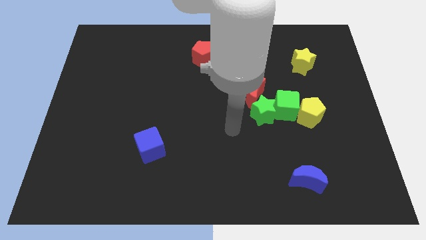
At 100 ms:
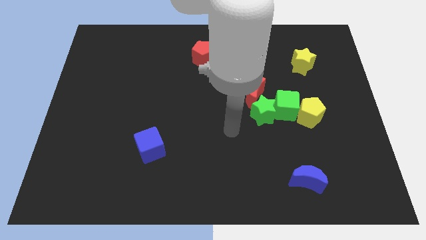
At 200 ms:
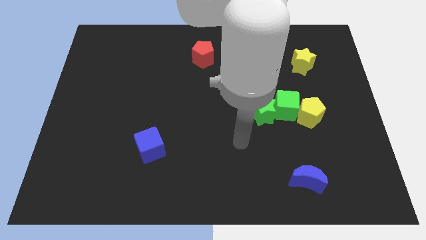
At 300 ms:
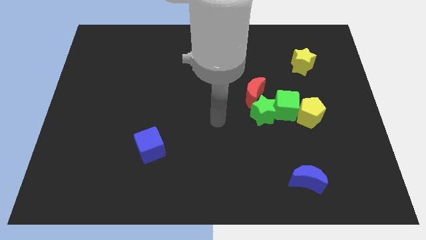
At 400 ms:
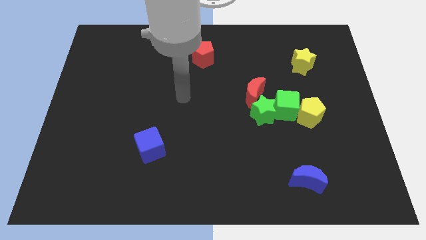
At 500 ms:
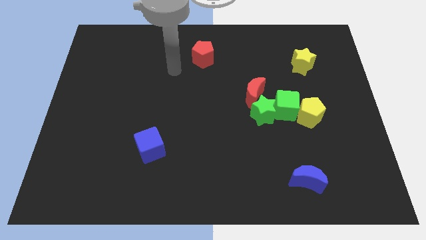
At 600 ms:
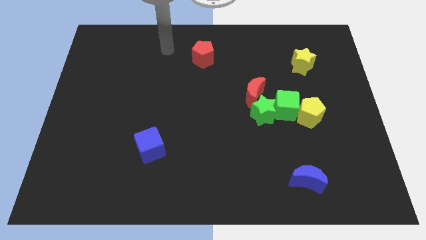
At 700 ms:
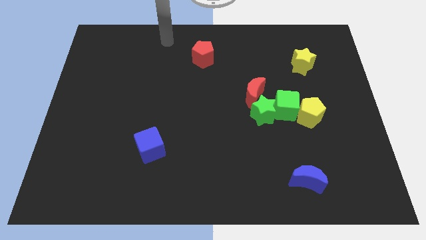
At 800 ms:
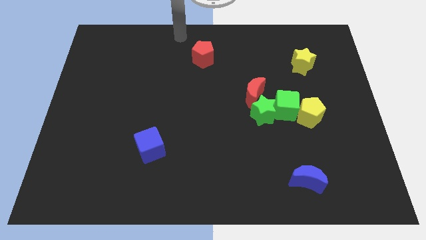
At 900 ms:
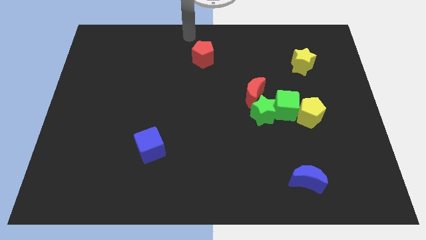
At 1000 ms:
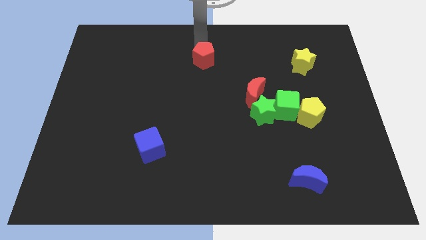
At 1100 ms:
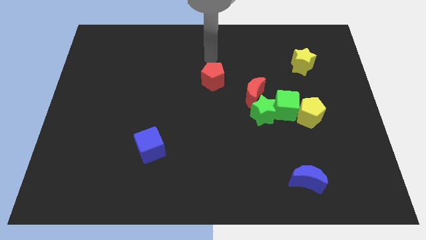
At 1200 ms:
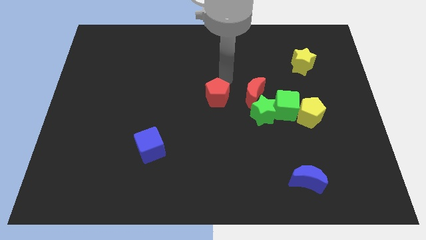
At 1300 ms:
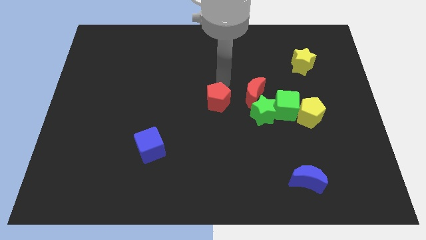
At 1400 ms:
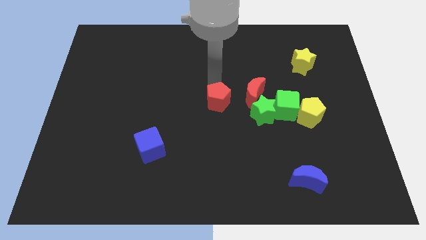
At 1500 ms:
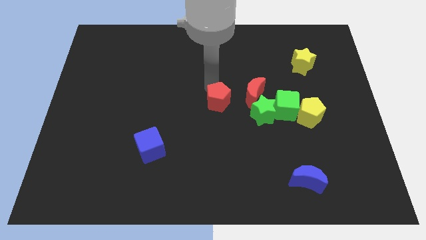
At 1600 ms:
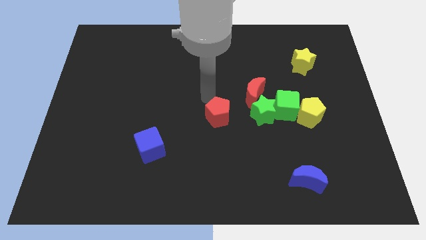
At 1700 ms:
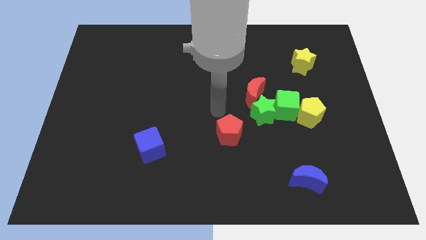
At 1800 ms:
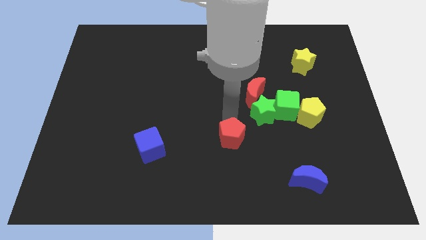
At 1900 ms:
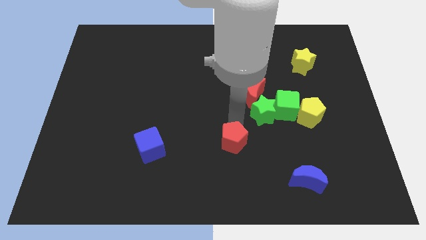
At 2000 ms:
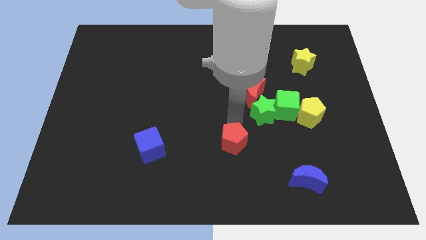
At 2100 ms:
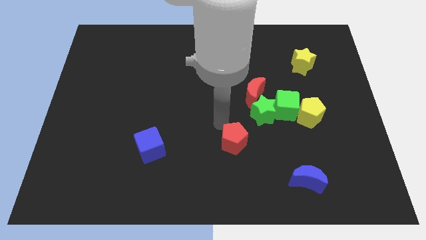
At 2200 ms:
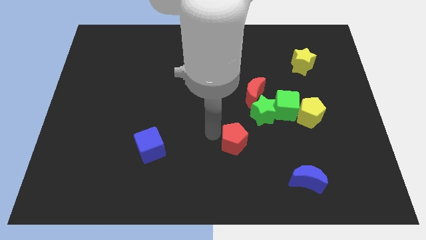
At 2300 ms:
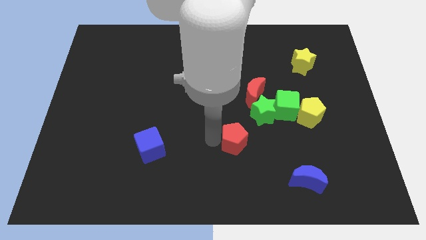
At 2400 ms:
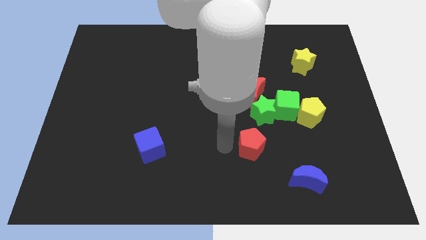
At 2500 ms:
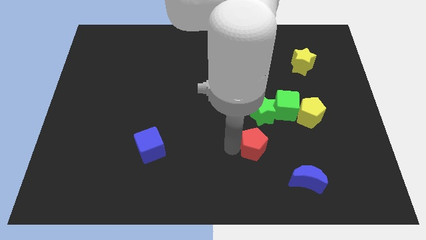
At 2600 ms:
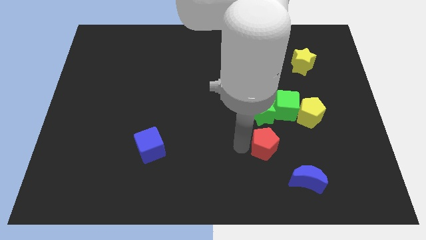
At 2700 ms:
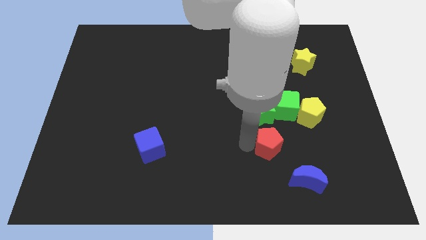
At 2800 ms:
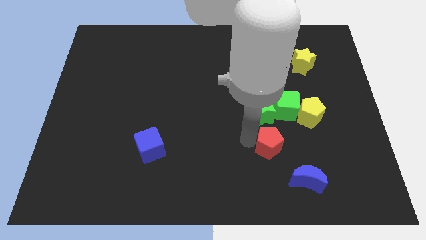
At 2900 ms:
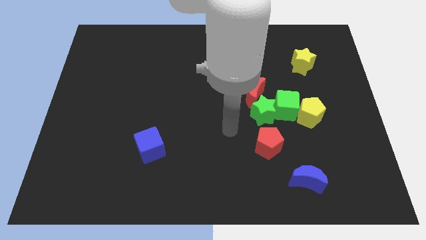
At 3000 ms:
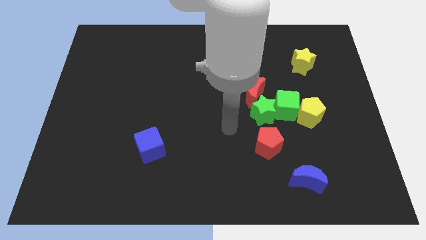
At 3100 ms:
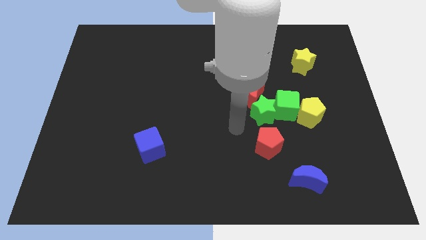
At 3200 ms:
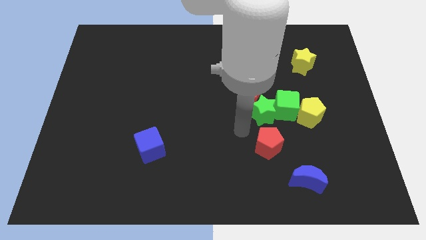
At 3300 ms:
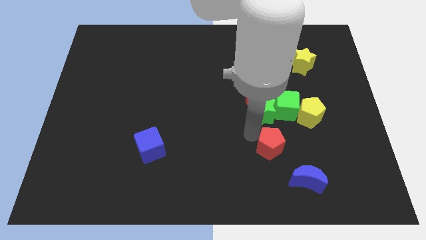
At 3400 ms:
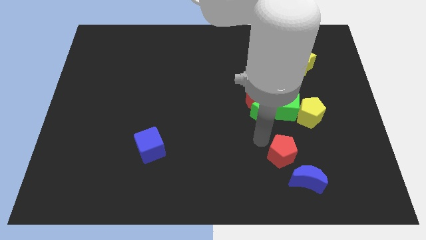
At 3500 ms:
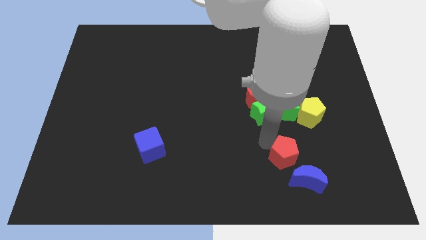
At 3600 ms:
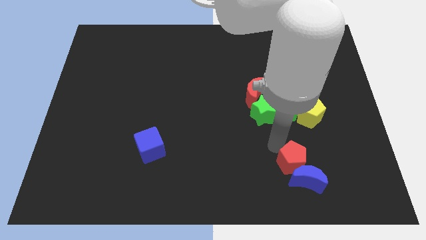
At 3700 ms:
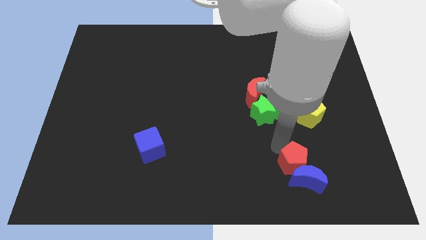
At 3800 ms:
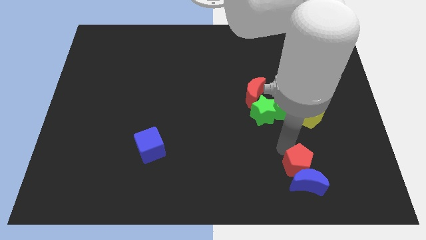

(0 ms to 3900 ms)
move the red pentagon close to the blue moon

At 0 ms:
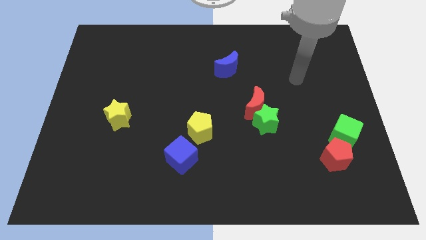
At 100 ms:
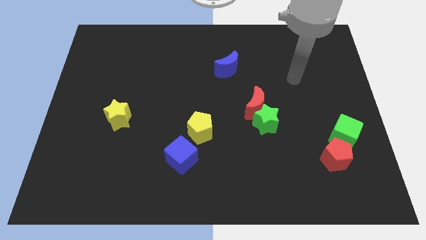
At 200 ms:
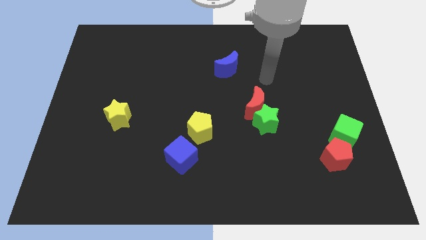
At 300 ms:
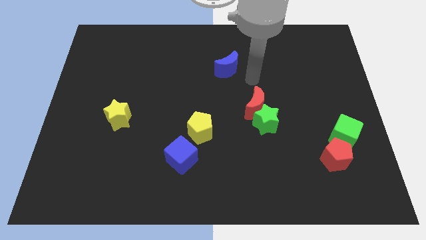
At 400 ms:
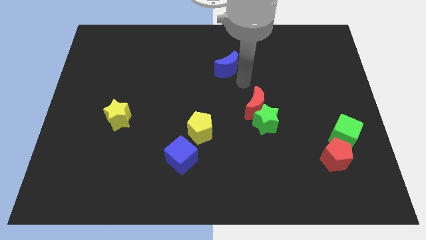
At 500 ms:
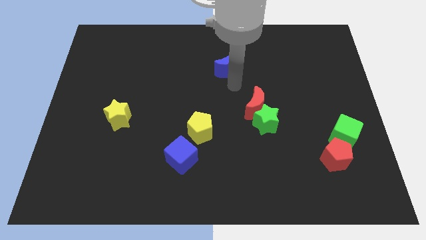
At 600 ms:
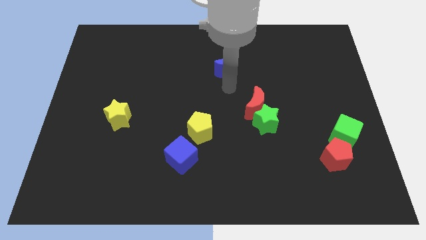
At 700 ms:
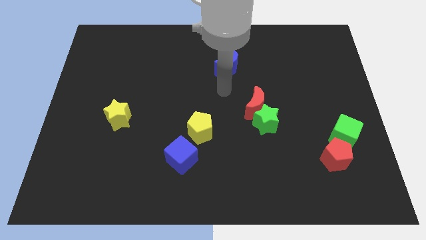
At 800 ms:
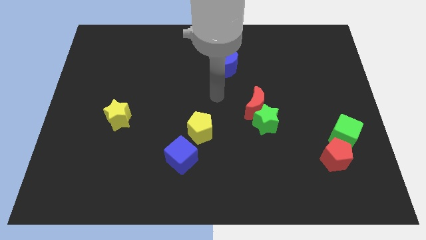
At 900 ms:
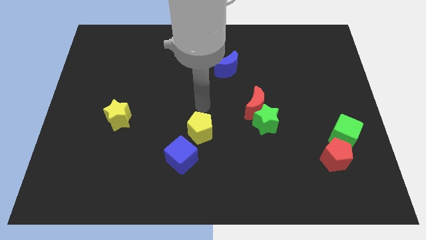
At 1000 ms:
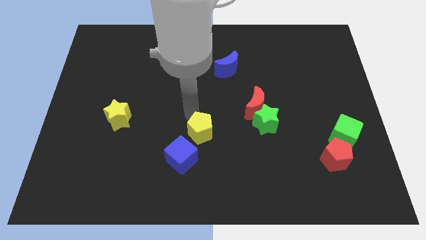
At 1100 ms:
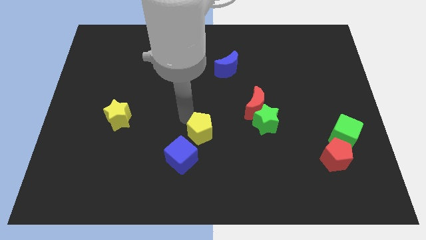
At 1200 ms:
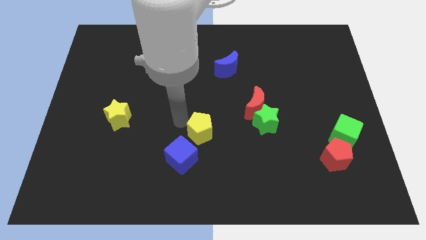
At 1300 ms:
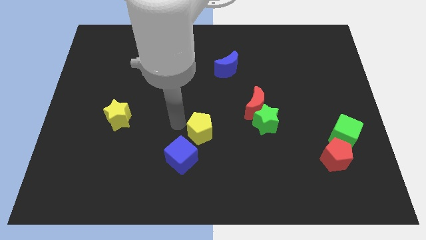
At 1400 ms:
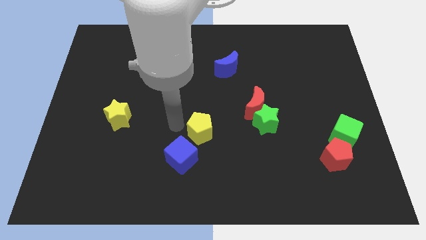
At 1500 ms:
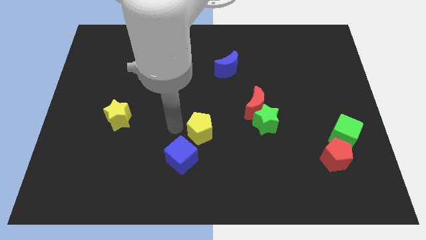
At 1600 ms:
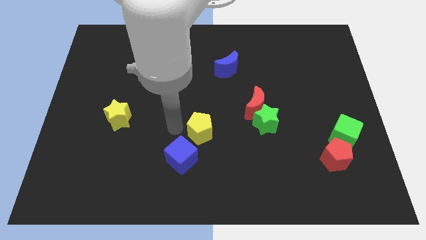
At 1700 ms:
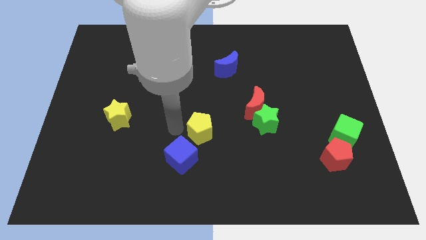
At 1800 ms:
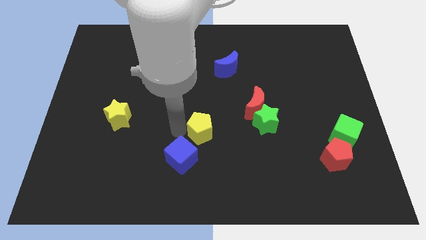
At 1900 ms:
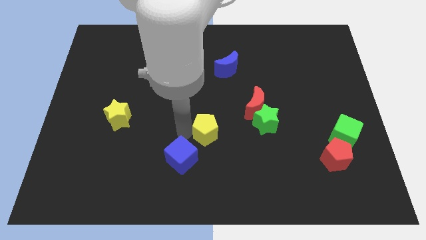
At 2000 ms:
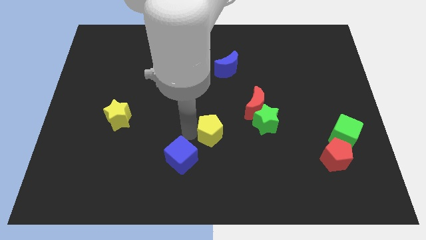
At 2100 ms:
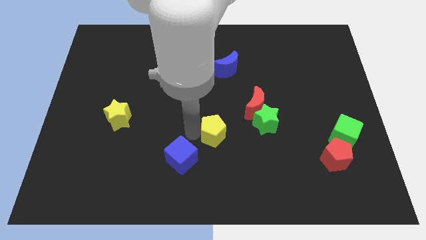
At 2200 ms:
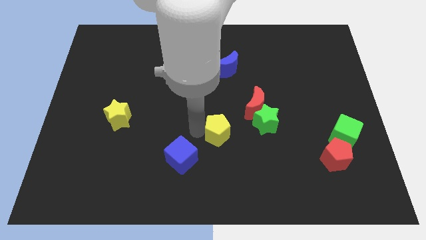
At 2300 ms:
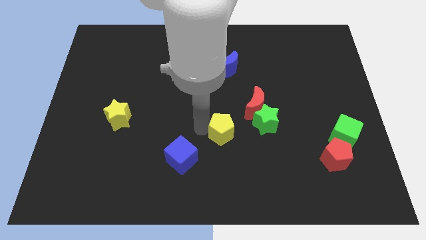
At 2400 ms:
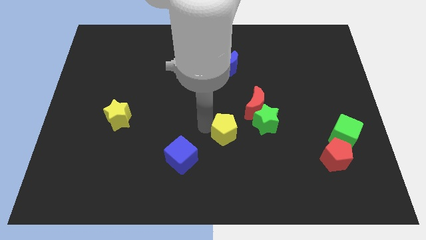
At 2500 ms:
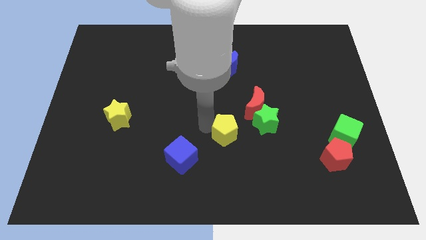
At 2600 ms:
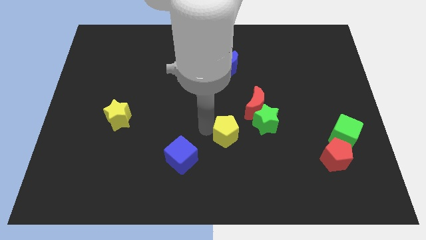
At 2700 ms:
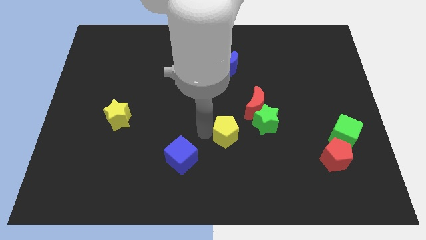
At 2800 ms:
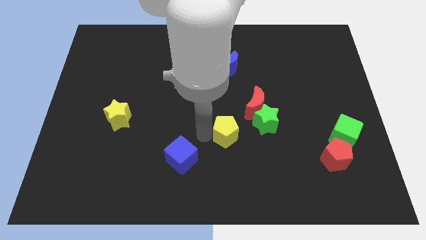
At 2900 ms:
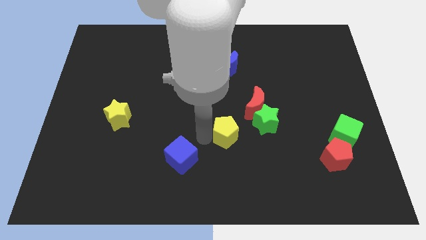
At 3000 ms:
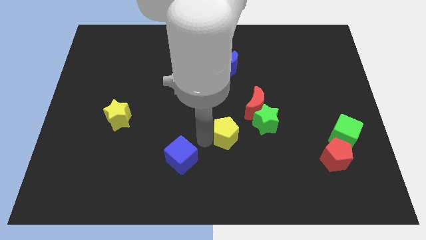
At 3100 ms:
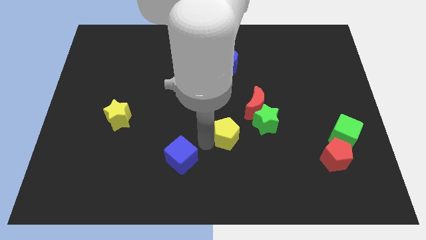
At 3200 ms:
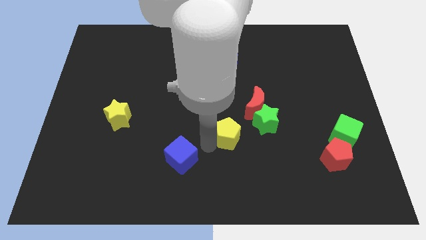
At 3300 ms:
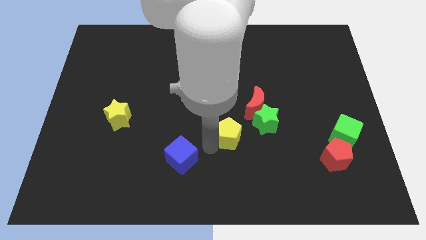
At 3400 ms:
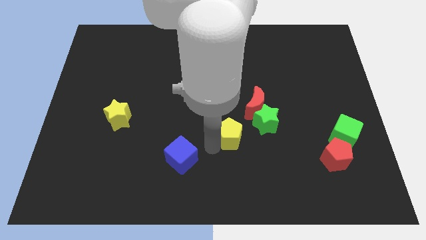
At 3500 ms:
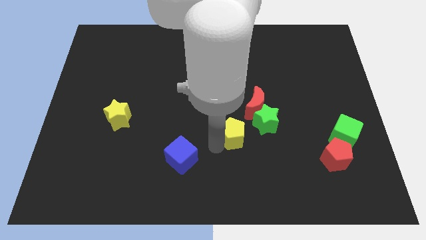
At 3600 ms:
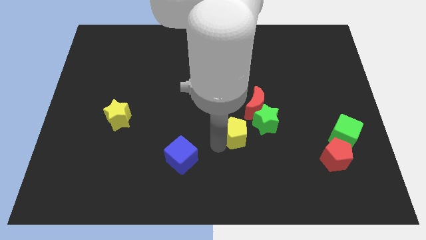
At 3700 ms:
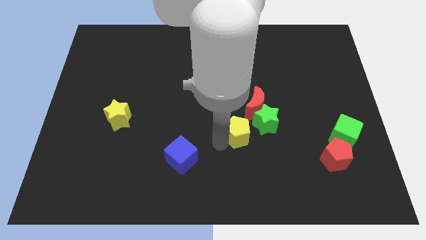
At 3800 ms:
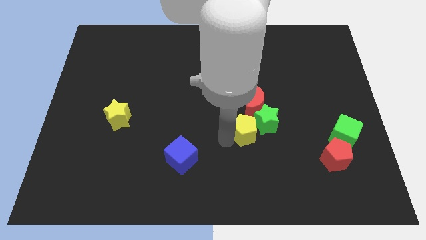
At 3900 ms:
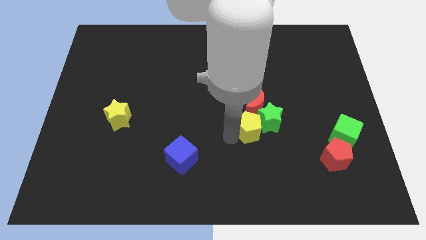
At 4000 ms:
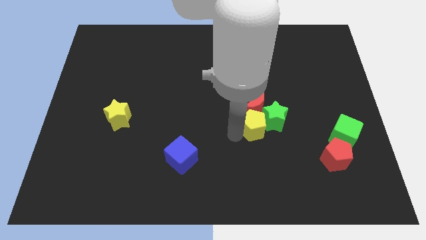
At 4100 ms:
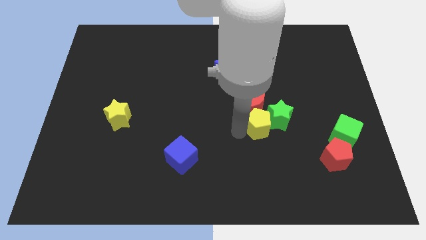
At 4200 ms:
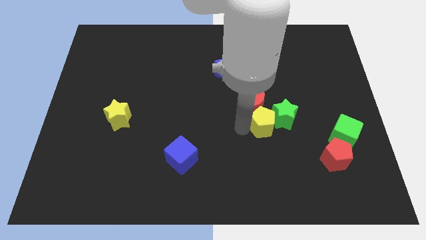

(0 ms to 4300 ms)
slide the yellow pentagon to the red moon
